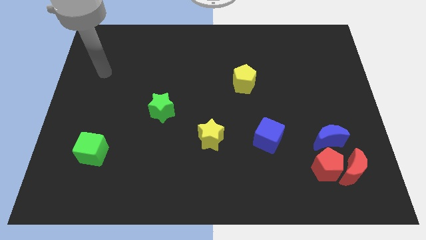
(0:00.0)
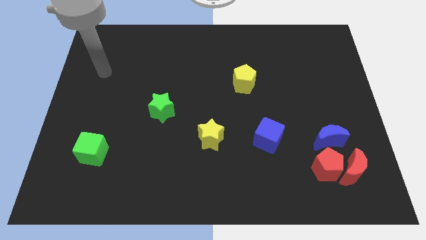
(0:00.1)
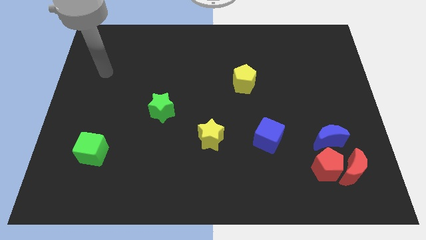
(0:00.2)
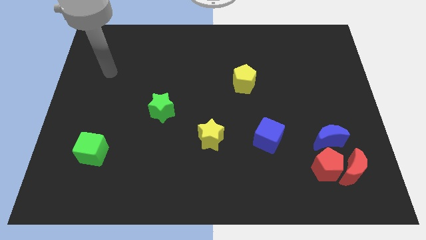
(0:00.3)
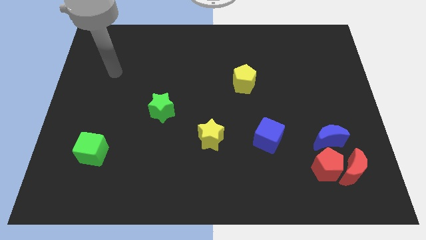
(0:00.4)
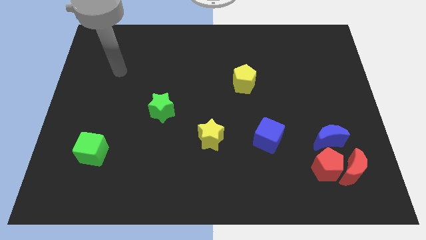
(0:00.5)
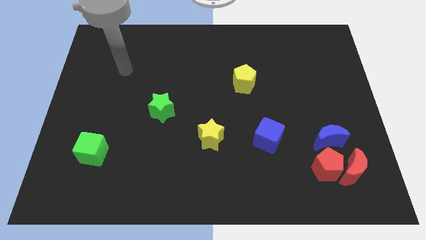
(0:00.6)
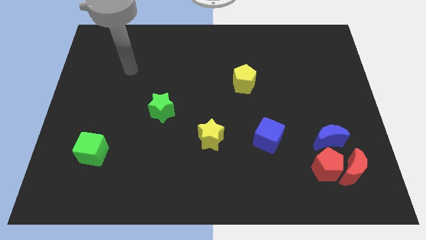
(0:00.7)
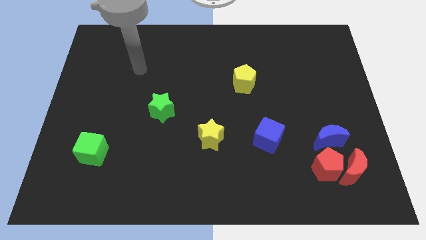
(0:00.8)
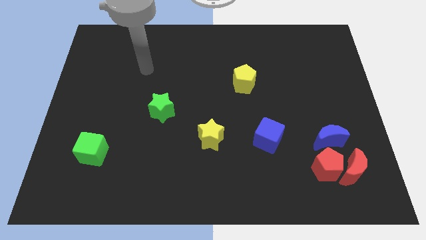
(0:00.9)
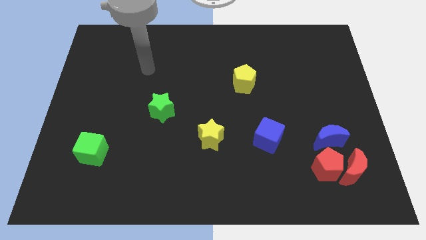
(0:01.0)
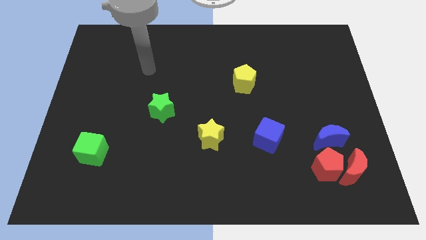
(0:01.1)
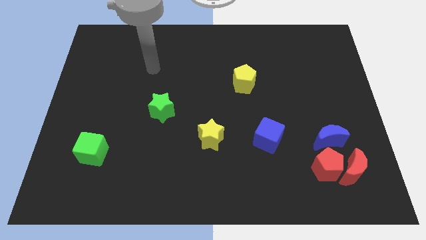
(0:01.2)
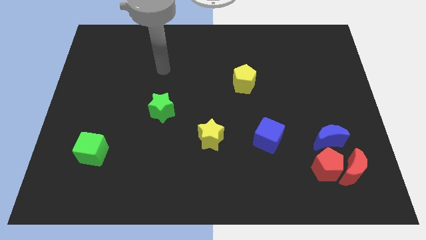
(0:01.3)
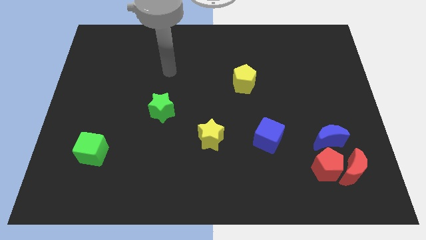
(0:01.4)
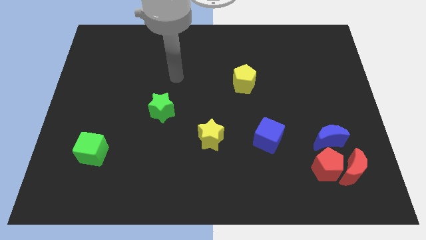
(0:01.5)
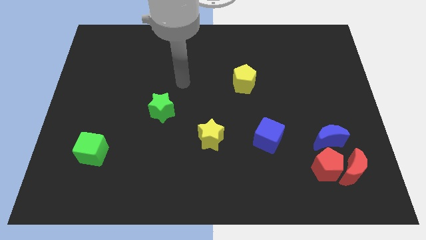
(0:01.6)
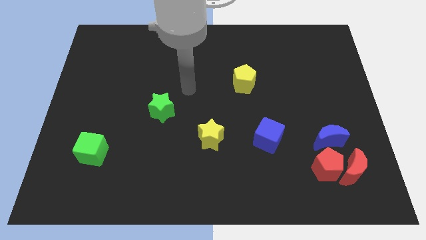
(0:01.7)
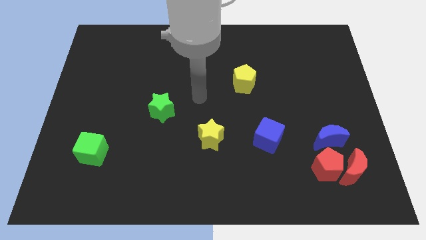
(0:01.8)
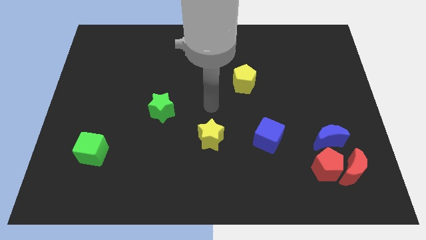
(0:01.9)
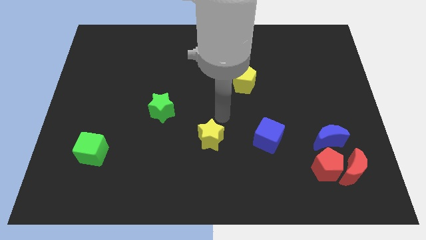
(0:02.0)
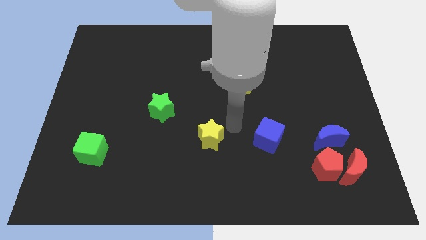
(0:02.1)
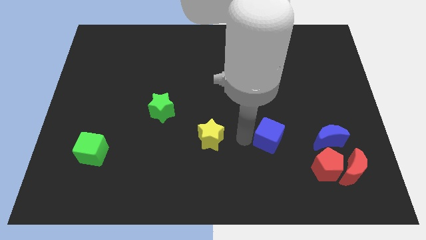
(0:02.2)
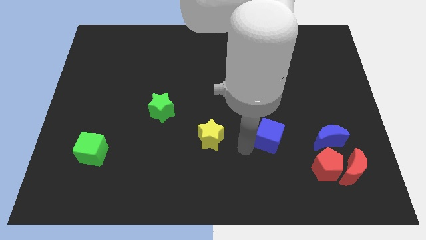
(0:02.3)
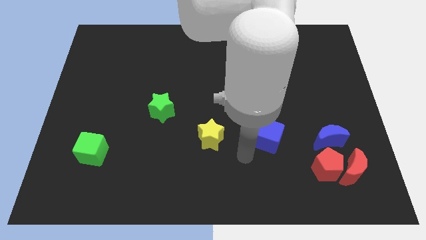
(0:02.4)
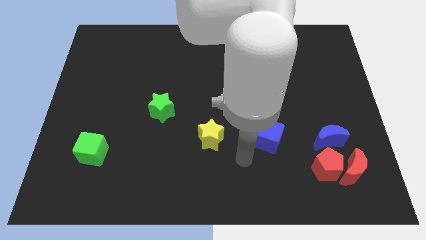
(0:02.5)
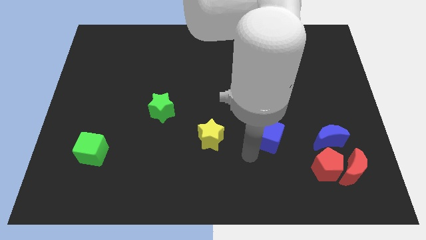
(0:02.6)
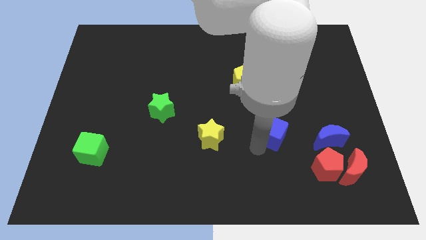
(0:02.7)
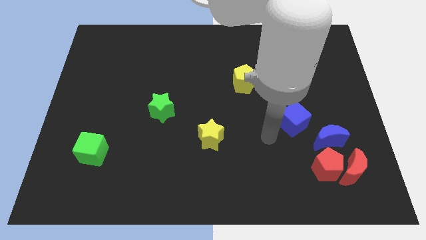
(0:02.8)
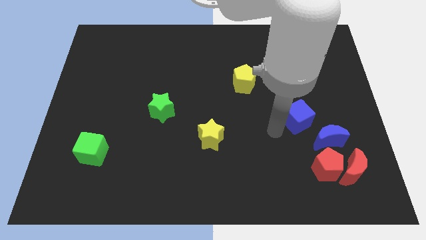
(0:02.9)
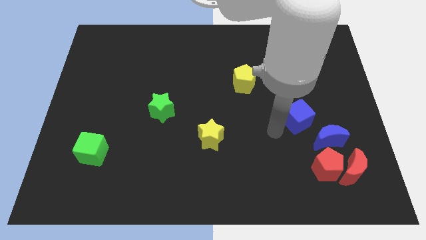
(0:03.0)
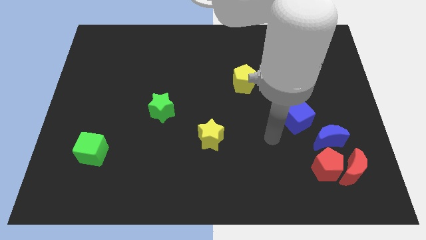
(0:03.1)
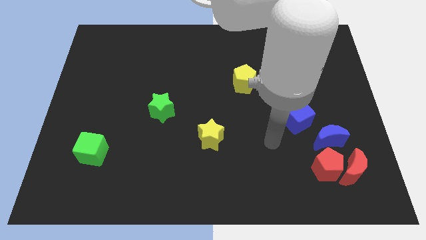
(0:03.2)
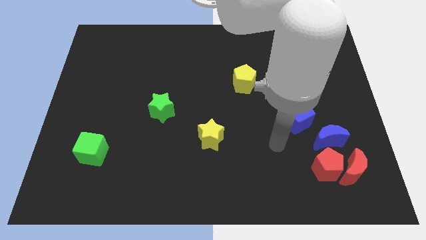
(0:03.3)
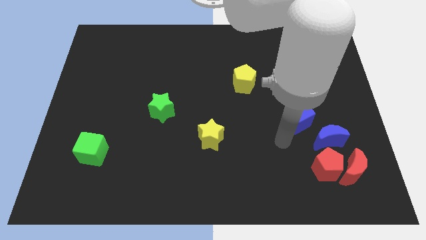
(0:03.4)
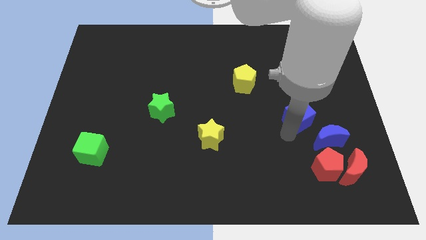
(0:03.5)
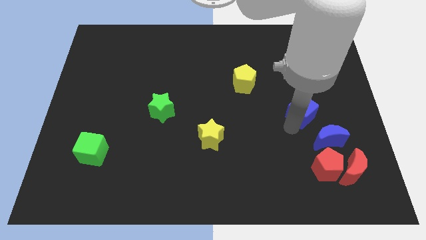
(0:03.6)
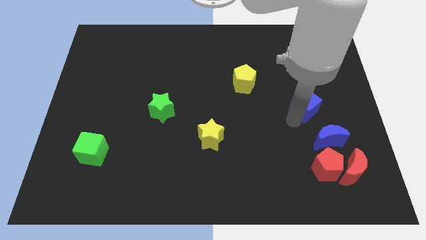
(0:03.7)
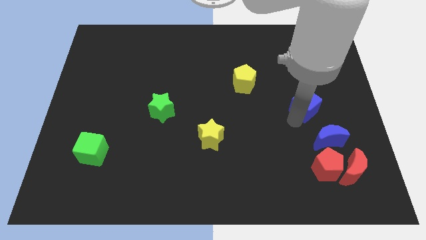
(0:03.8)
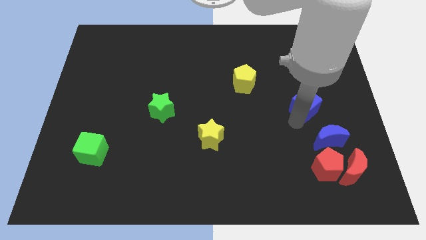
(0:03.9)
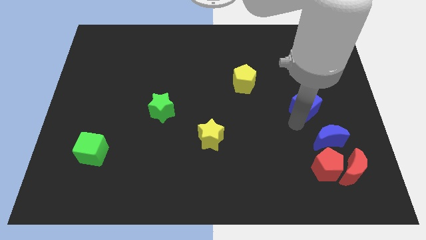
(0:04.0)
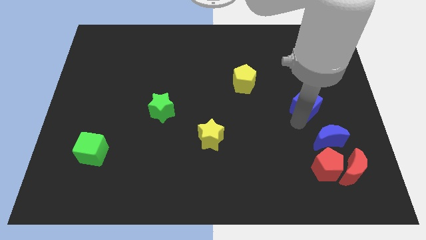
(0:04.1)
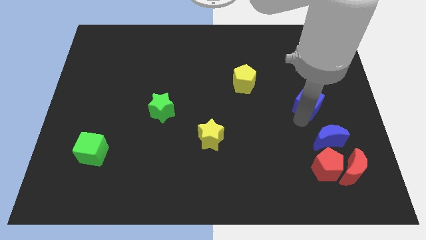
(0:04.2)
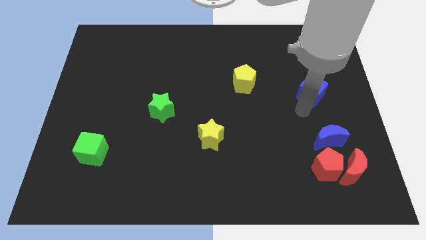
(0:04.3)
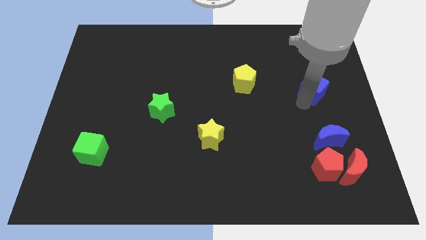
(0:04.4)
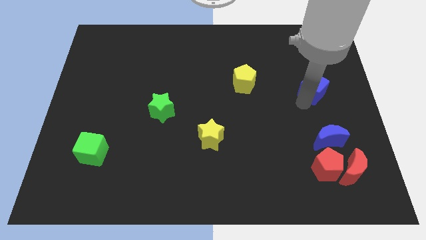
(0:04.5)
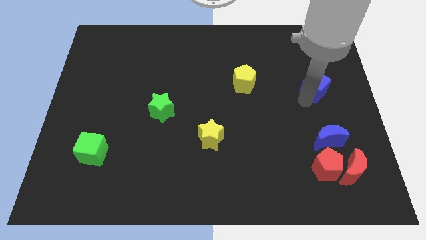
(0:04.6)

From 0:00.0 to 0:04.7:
place the blue cube above the blue crescent

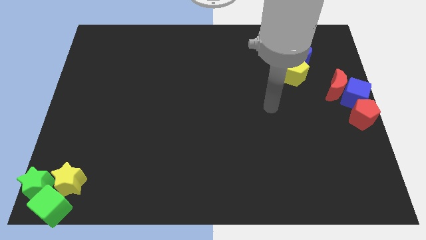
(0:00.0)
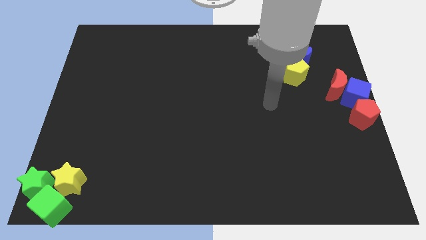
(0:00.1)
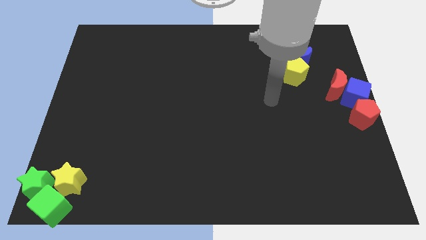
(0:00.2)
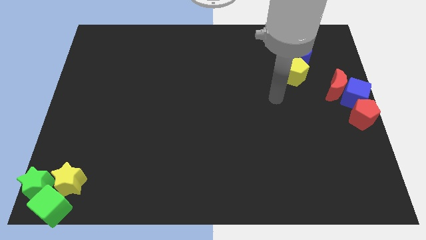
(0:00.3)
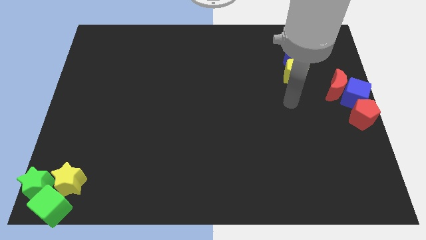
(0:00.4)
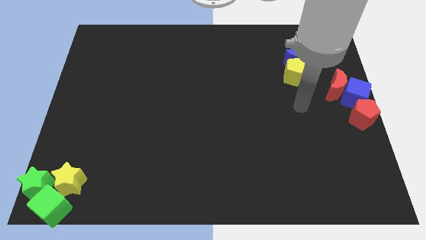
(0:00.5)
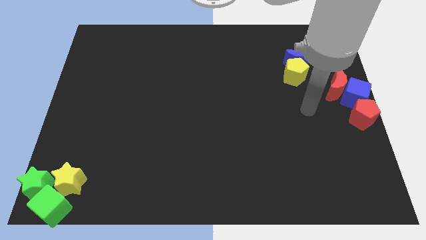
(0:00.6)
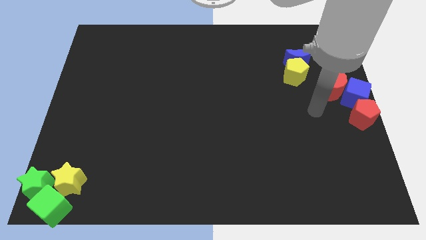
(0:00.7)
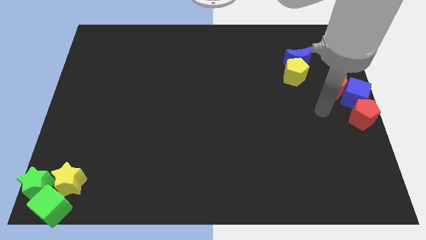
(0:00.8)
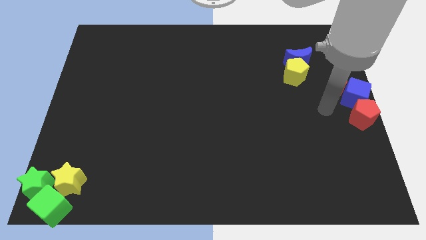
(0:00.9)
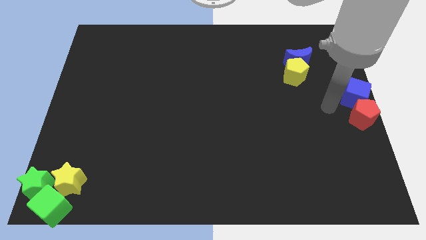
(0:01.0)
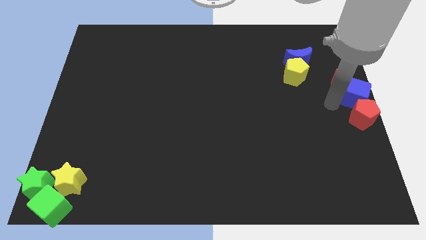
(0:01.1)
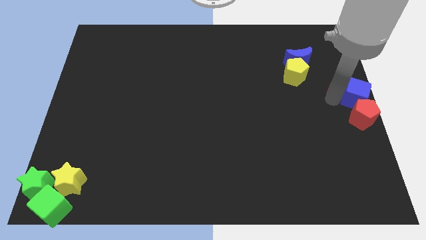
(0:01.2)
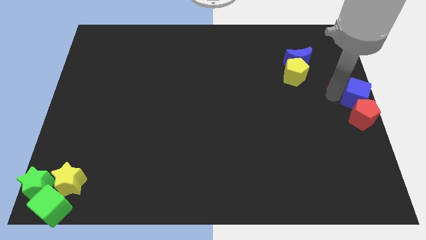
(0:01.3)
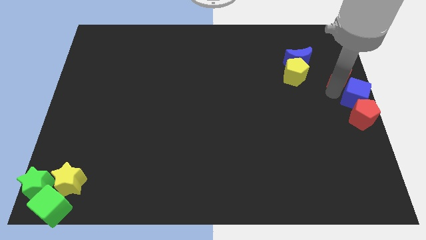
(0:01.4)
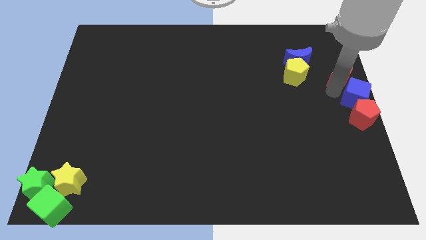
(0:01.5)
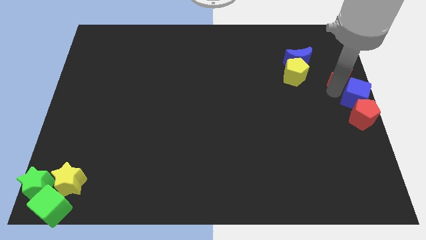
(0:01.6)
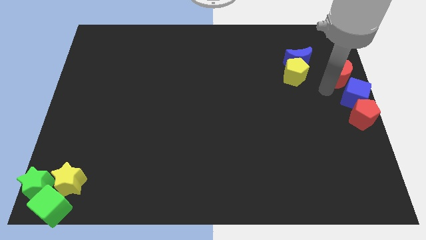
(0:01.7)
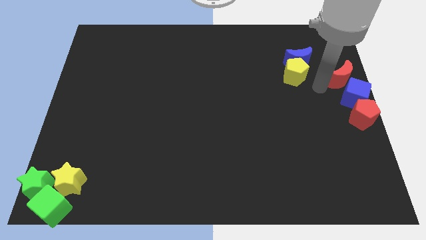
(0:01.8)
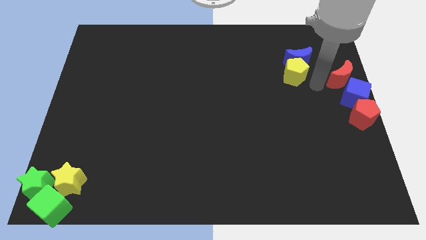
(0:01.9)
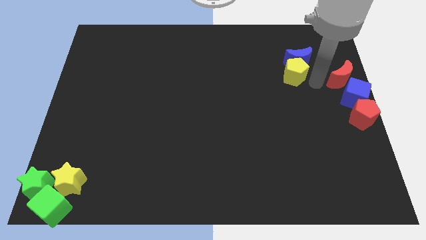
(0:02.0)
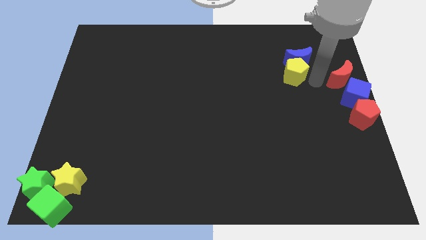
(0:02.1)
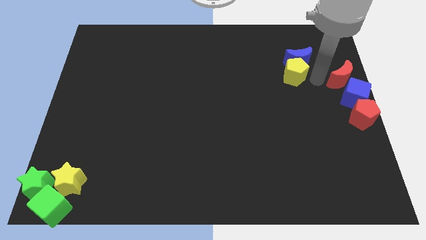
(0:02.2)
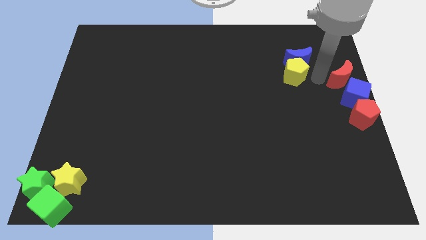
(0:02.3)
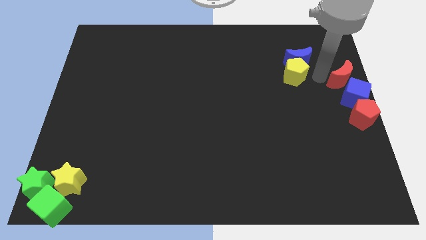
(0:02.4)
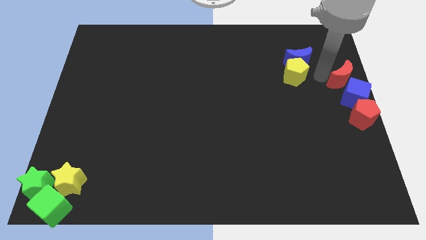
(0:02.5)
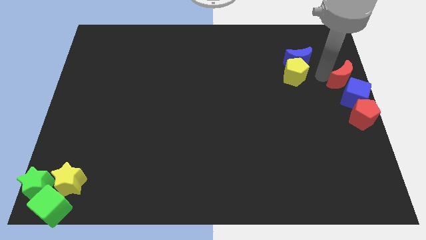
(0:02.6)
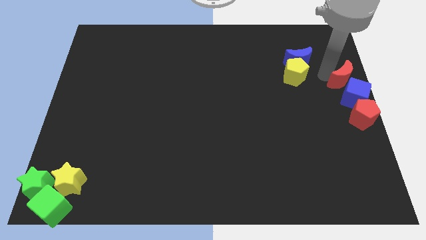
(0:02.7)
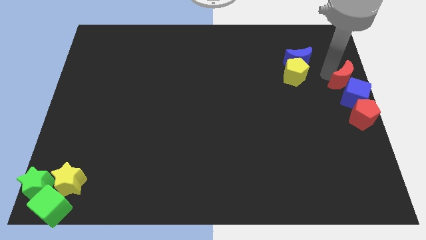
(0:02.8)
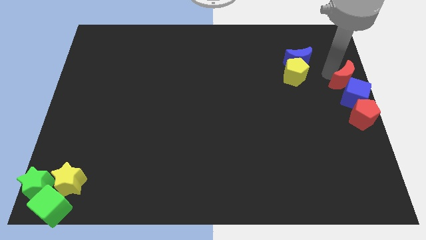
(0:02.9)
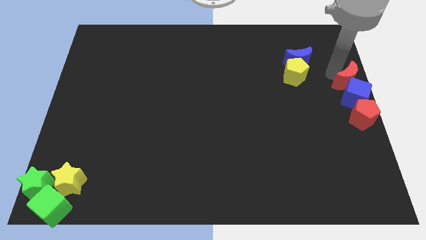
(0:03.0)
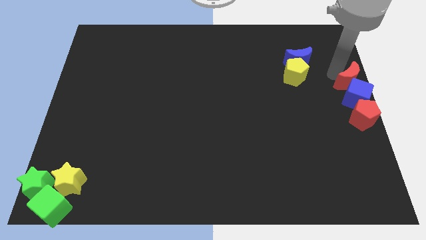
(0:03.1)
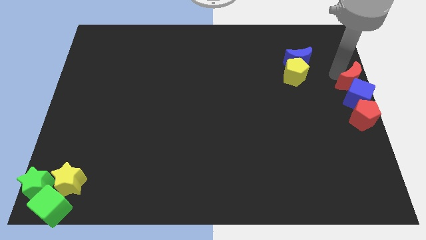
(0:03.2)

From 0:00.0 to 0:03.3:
place red crescent above the blue cube

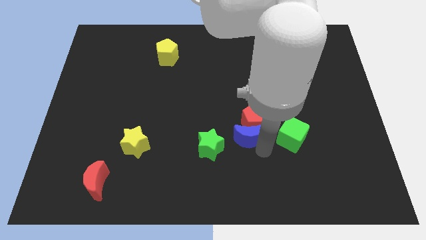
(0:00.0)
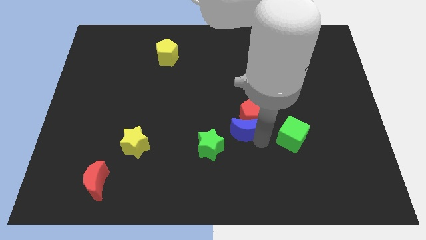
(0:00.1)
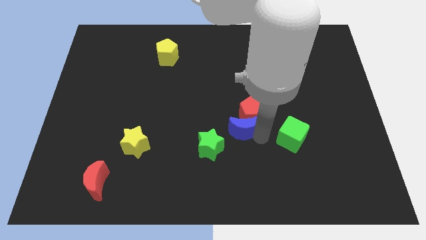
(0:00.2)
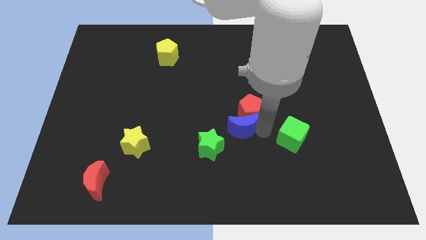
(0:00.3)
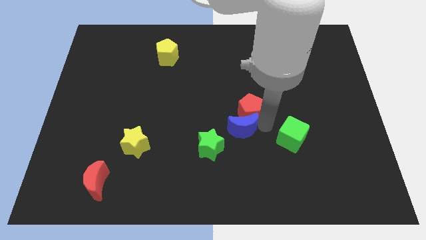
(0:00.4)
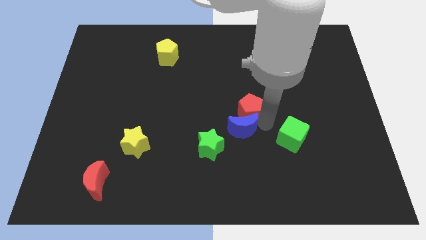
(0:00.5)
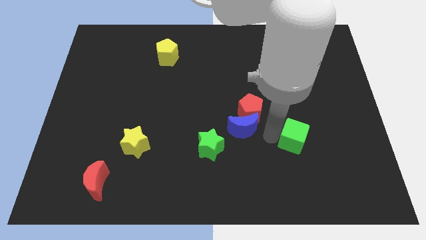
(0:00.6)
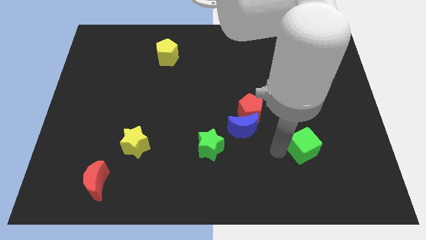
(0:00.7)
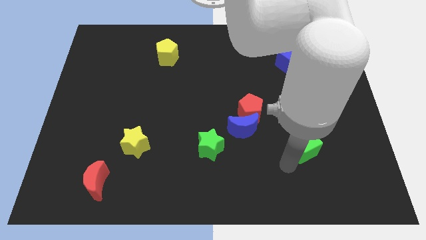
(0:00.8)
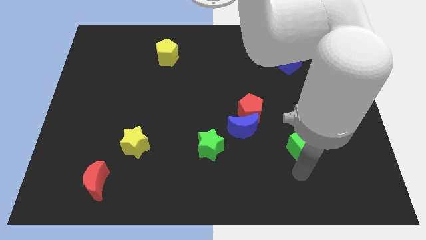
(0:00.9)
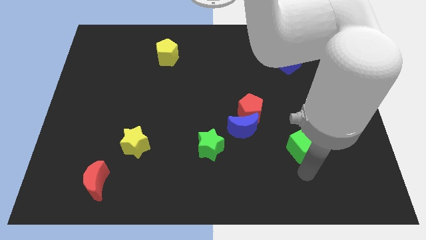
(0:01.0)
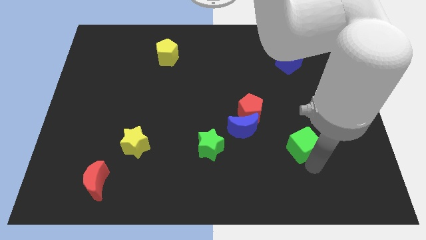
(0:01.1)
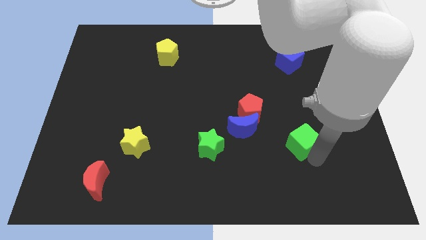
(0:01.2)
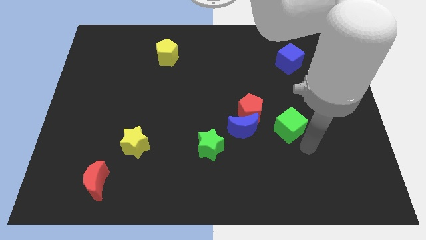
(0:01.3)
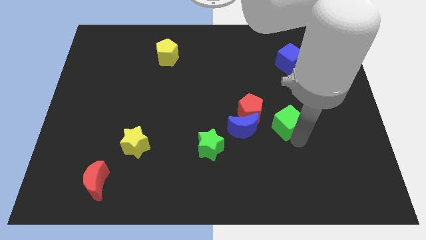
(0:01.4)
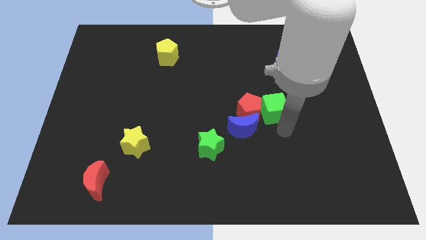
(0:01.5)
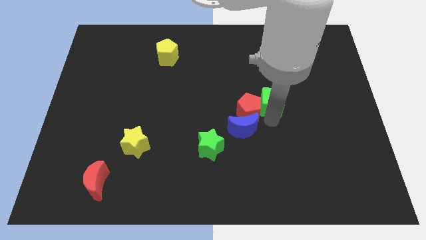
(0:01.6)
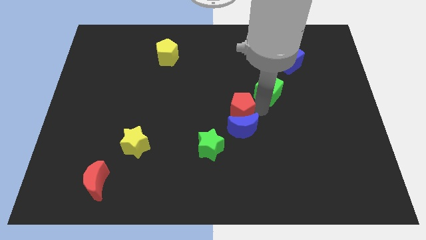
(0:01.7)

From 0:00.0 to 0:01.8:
drag the green cube slightly upwards
